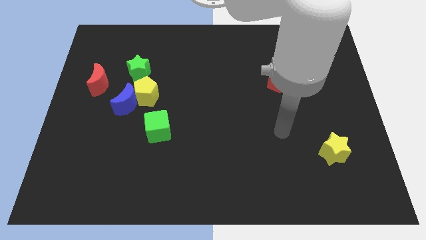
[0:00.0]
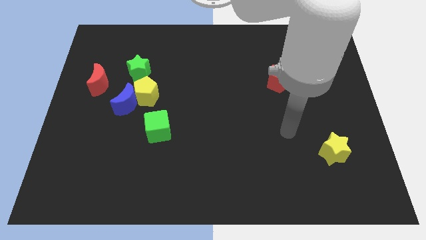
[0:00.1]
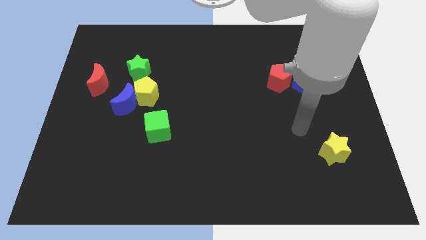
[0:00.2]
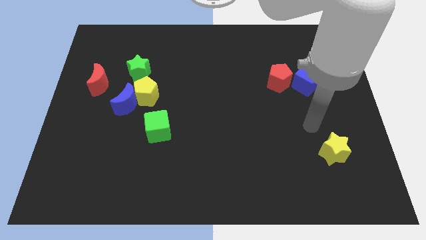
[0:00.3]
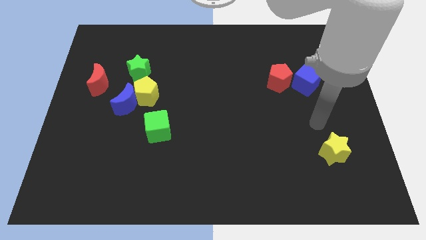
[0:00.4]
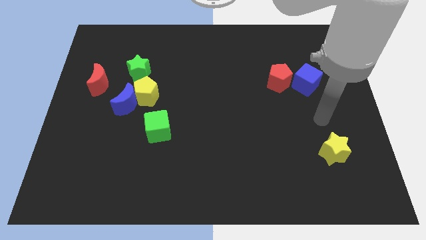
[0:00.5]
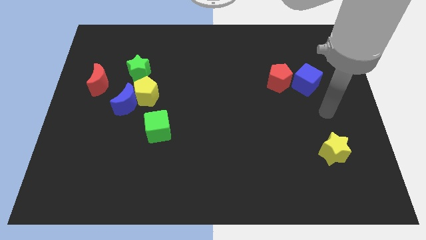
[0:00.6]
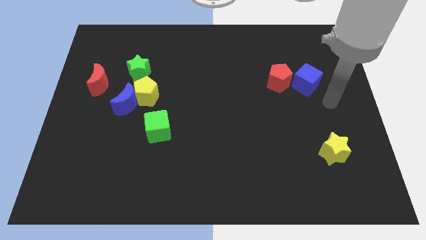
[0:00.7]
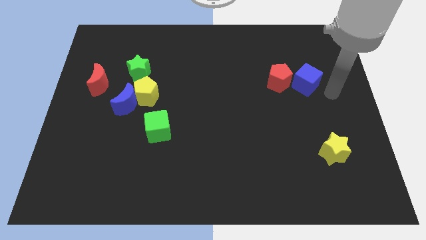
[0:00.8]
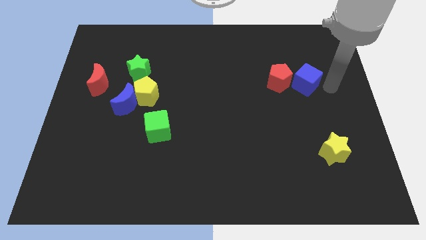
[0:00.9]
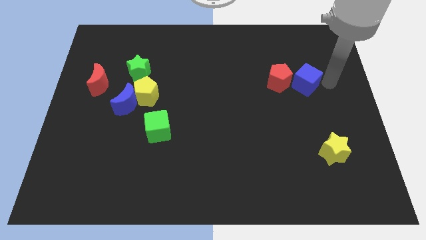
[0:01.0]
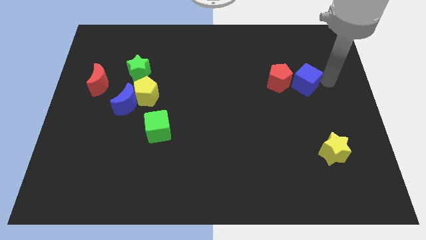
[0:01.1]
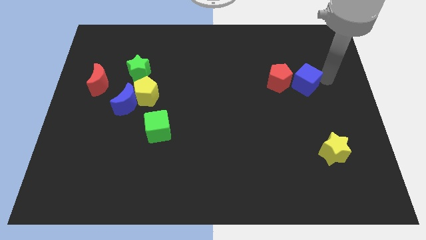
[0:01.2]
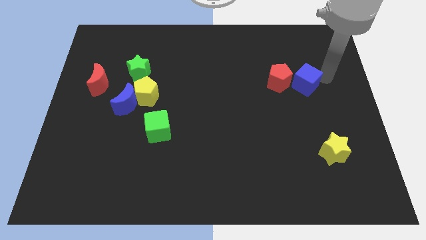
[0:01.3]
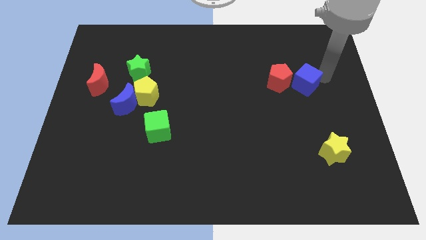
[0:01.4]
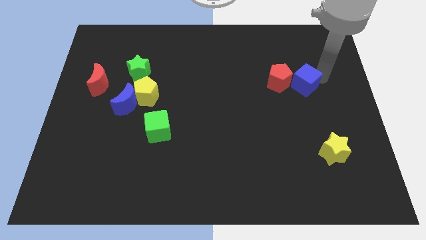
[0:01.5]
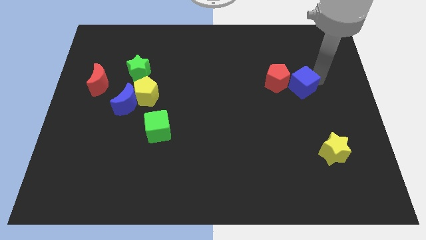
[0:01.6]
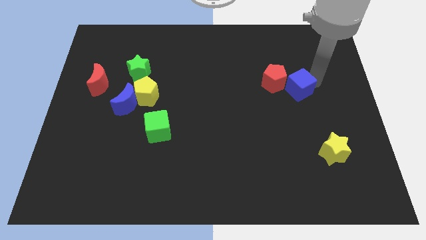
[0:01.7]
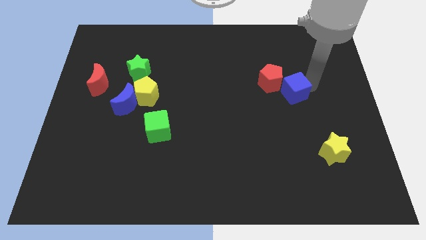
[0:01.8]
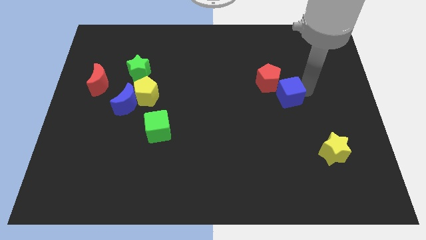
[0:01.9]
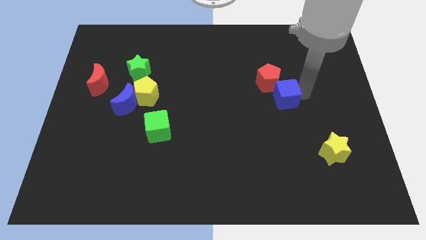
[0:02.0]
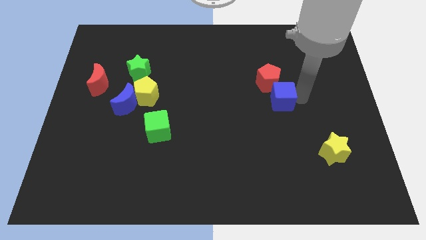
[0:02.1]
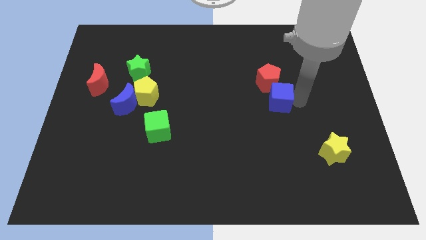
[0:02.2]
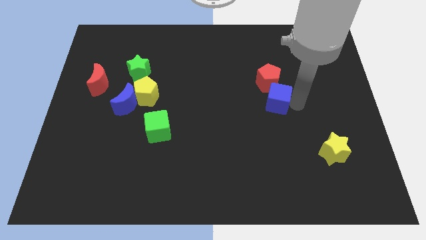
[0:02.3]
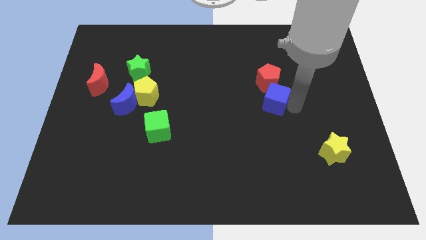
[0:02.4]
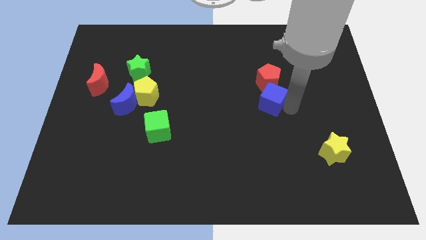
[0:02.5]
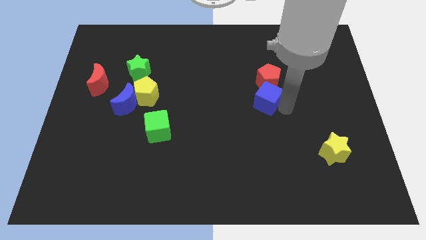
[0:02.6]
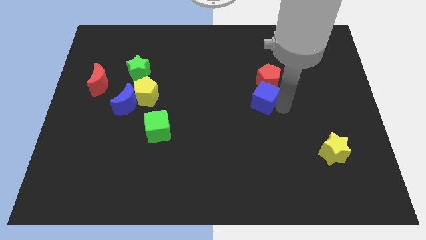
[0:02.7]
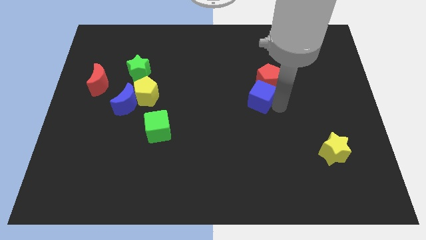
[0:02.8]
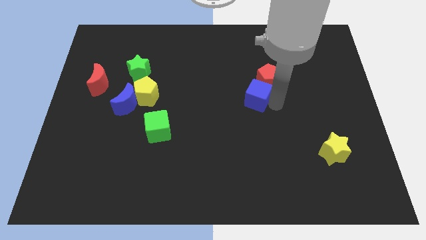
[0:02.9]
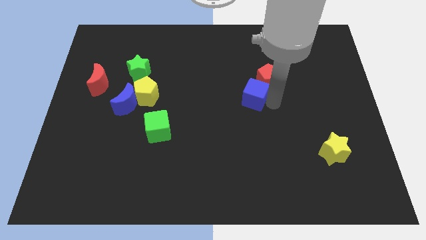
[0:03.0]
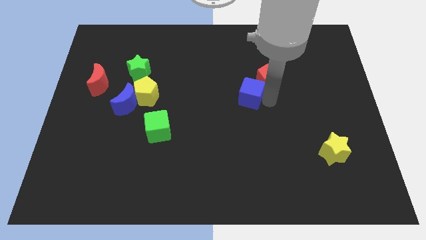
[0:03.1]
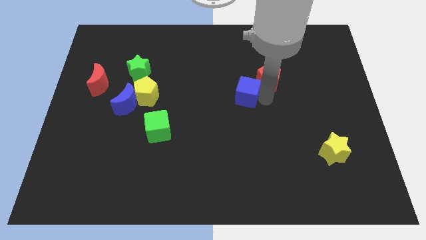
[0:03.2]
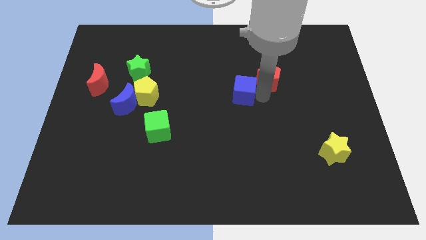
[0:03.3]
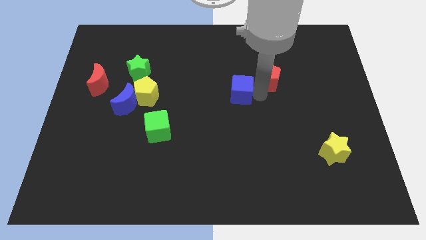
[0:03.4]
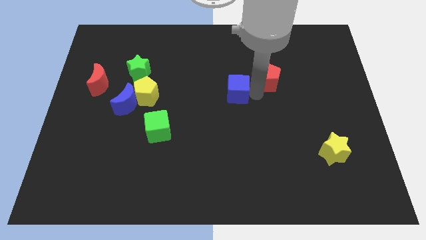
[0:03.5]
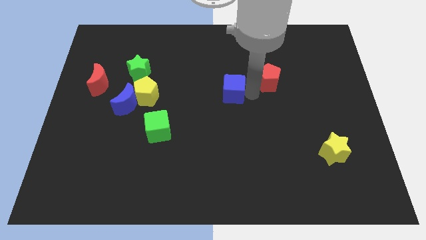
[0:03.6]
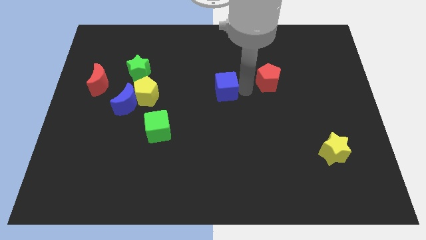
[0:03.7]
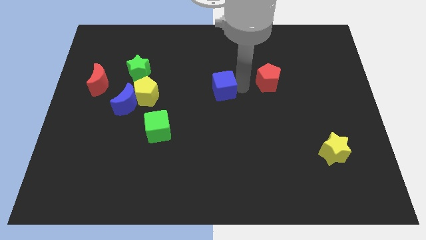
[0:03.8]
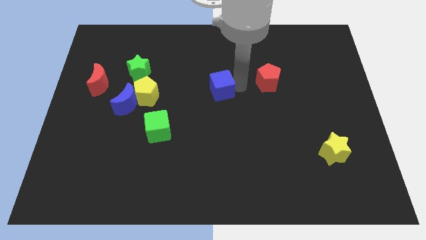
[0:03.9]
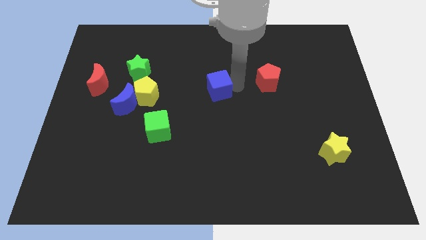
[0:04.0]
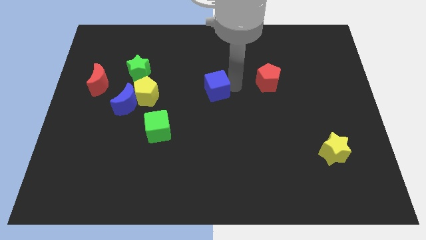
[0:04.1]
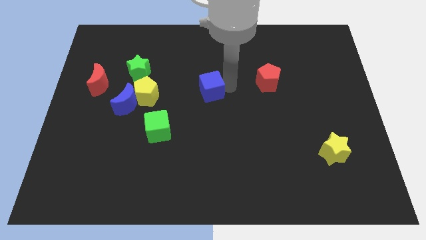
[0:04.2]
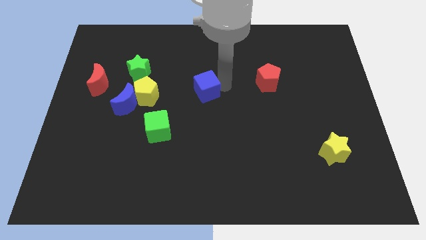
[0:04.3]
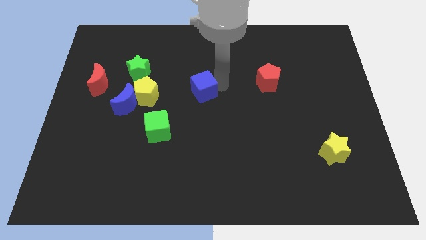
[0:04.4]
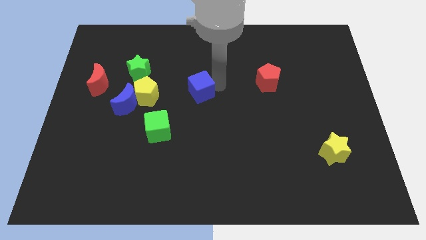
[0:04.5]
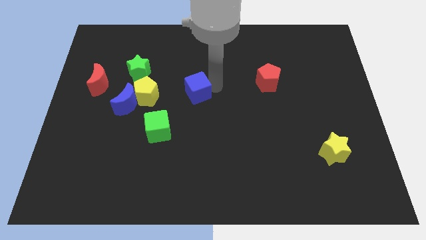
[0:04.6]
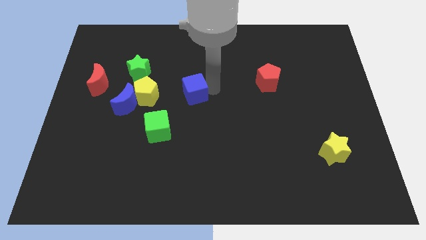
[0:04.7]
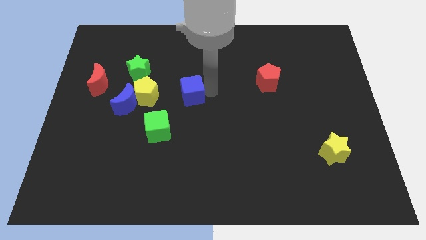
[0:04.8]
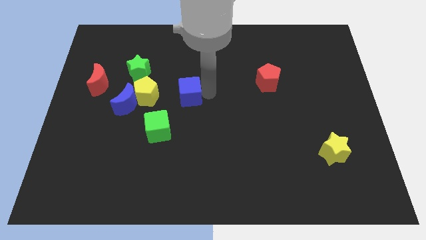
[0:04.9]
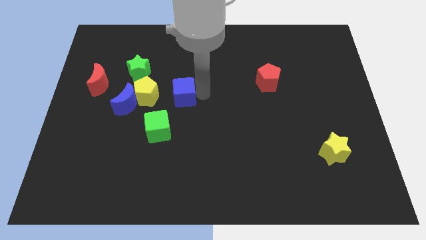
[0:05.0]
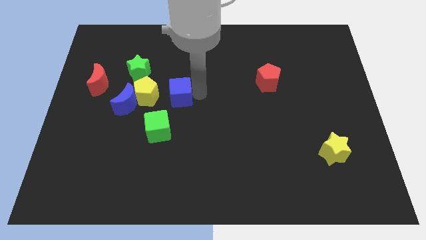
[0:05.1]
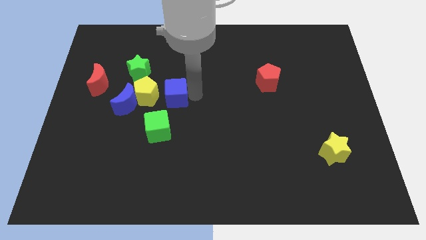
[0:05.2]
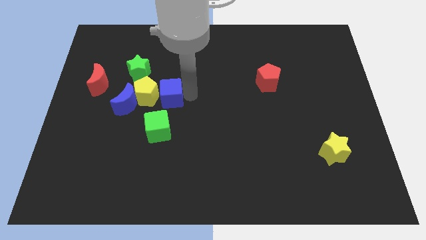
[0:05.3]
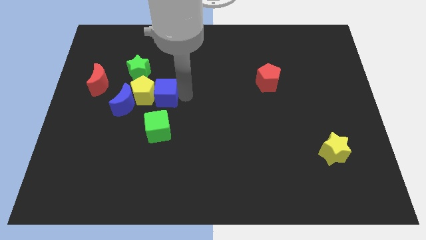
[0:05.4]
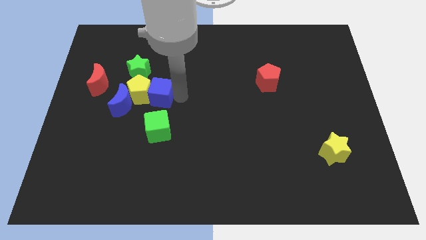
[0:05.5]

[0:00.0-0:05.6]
move the blue cube towards the yellow pentagon

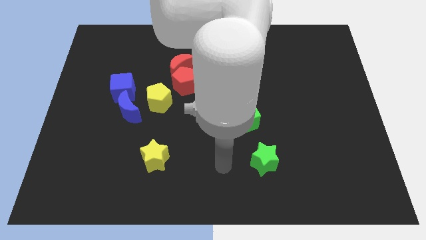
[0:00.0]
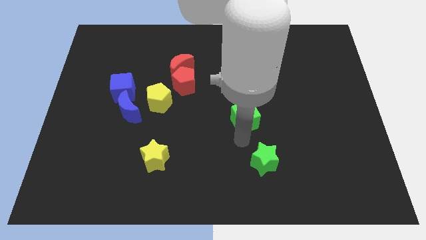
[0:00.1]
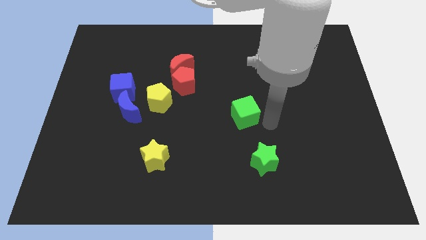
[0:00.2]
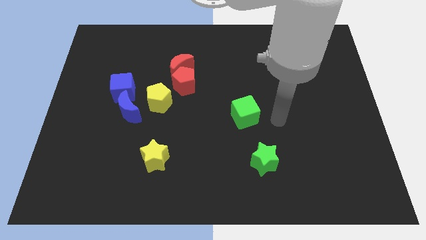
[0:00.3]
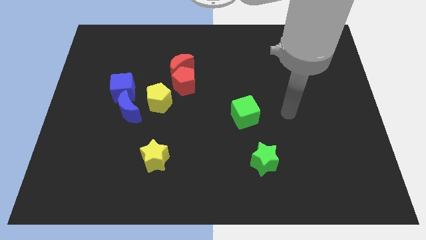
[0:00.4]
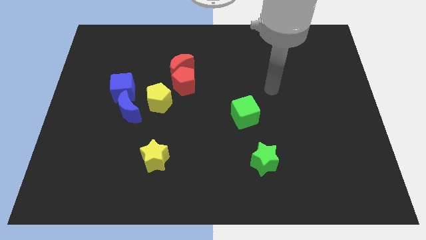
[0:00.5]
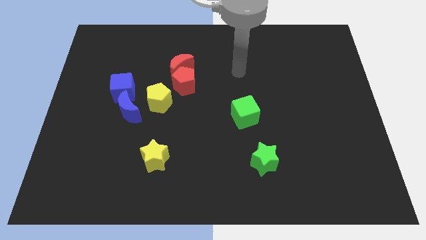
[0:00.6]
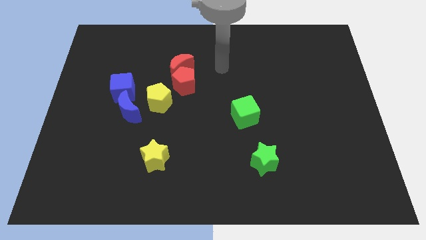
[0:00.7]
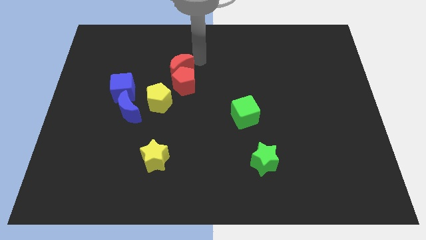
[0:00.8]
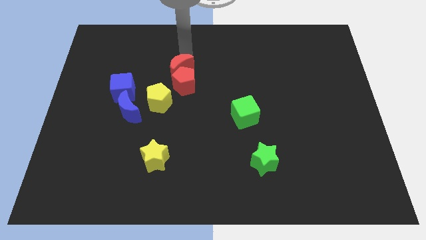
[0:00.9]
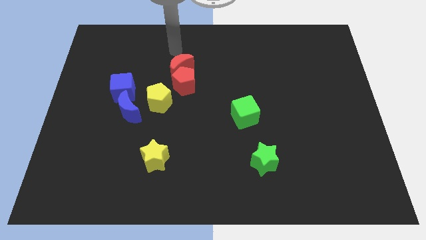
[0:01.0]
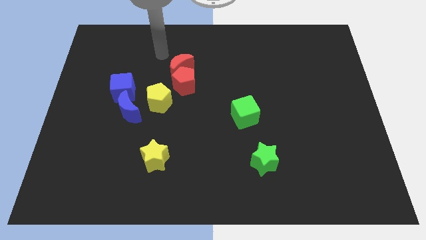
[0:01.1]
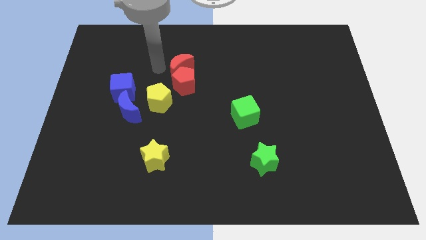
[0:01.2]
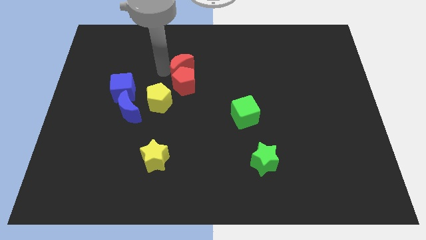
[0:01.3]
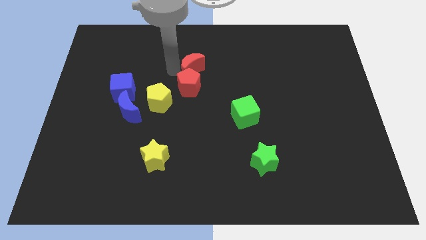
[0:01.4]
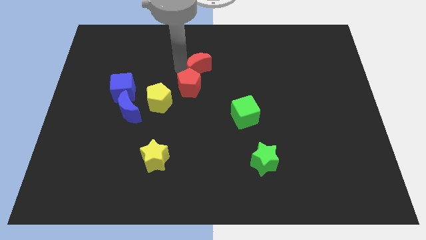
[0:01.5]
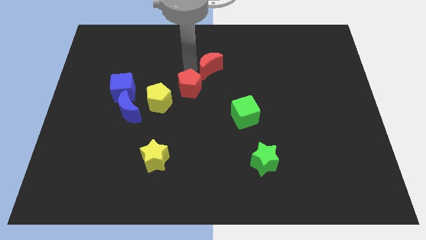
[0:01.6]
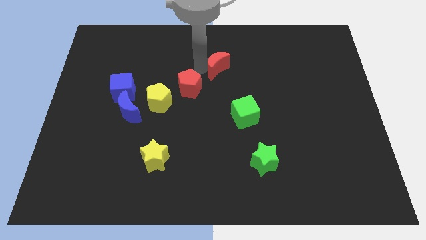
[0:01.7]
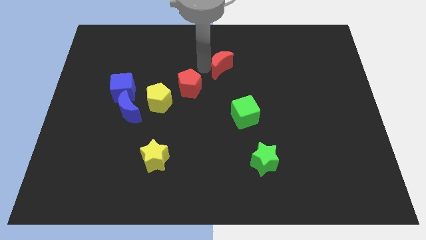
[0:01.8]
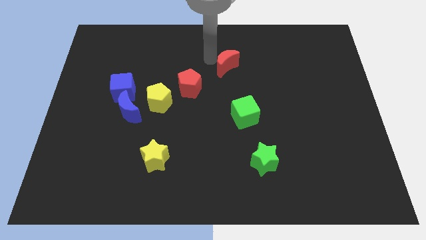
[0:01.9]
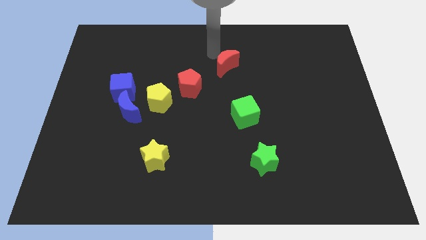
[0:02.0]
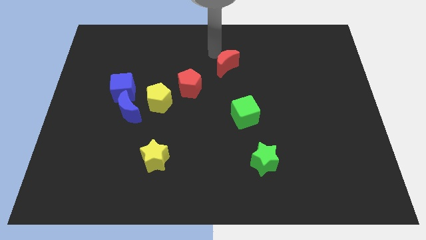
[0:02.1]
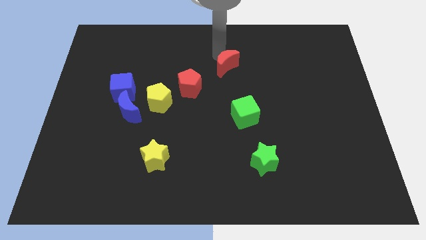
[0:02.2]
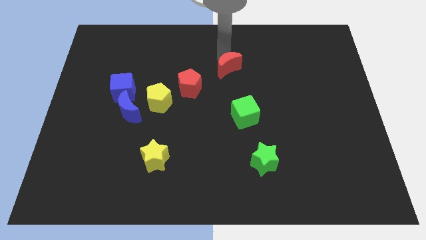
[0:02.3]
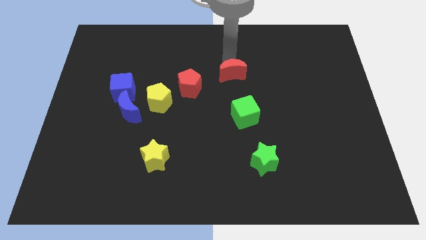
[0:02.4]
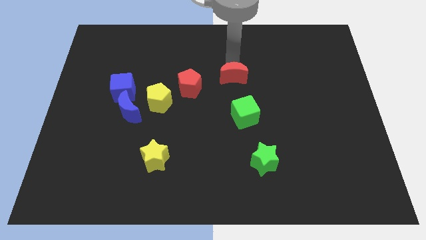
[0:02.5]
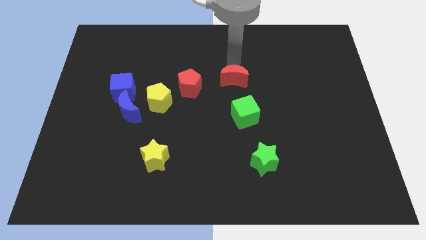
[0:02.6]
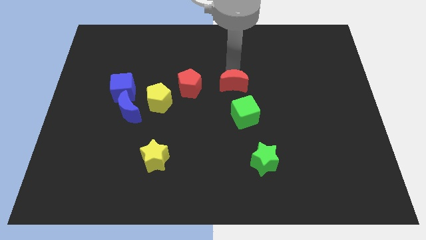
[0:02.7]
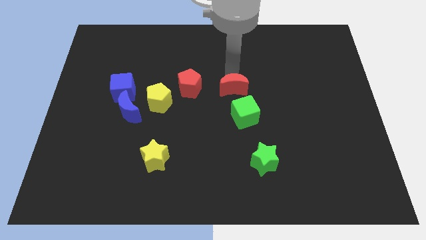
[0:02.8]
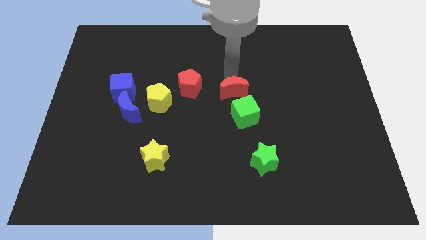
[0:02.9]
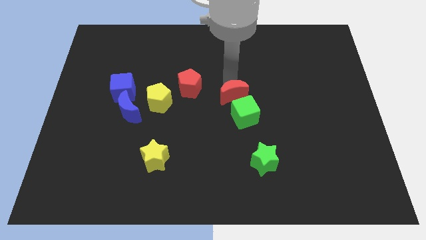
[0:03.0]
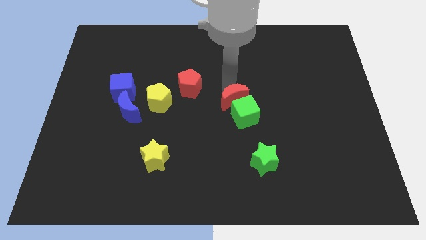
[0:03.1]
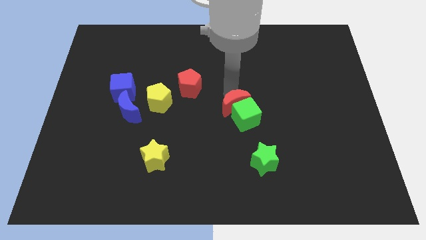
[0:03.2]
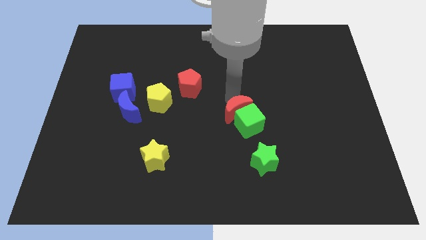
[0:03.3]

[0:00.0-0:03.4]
move the red moon next to the green cube
